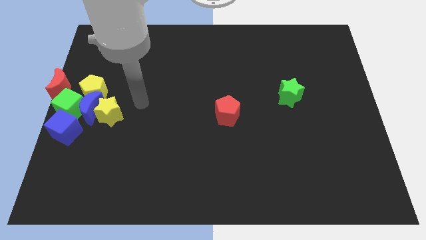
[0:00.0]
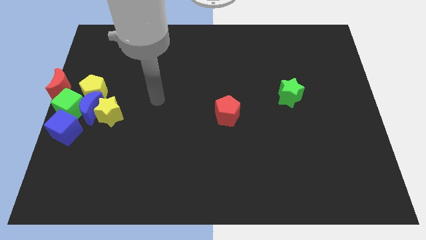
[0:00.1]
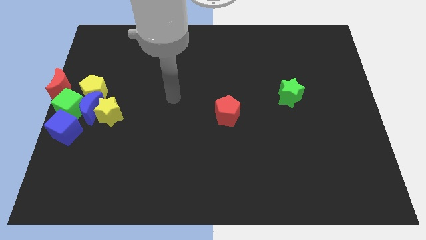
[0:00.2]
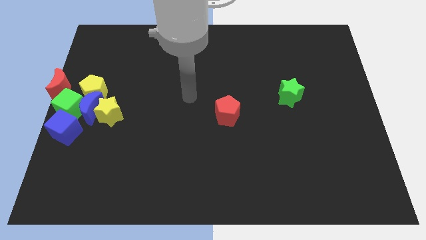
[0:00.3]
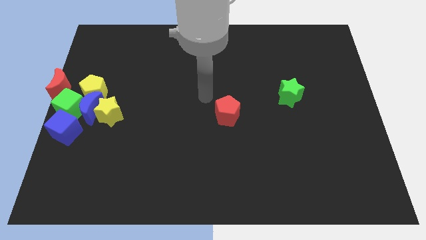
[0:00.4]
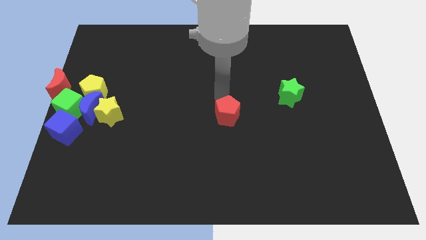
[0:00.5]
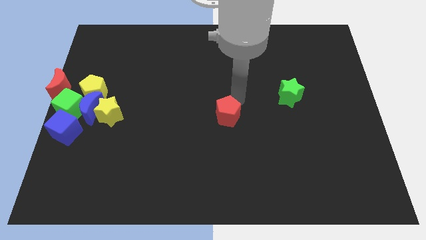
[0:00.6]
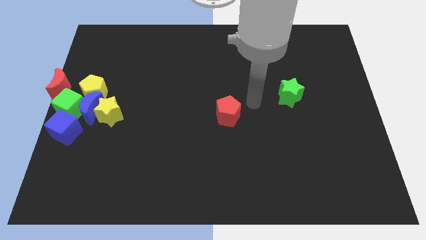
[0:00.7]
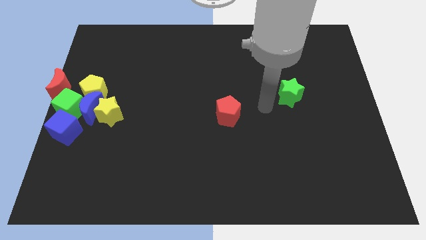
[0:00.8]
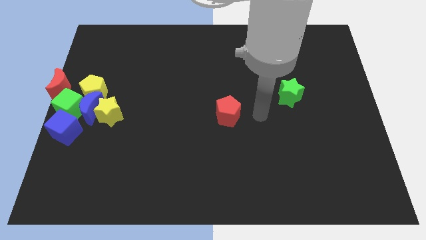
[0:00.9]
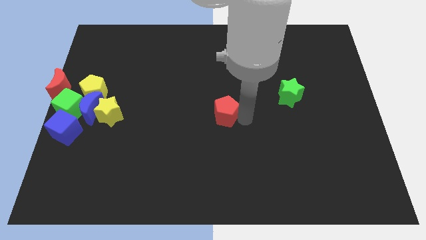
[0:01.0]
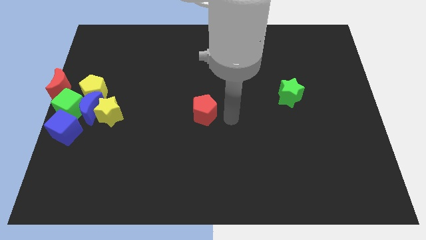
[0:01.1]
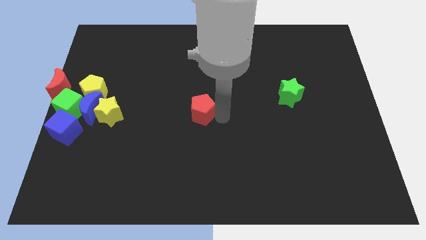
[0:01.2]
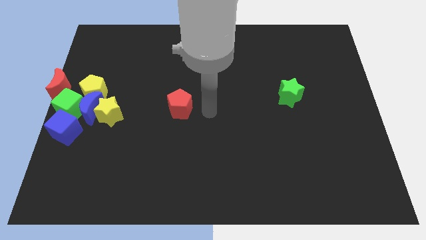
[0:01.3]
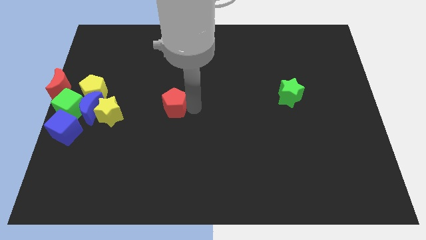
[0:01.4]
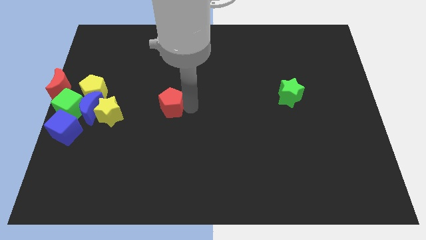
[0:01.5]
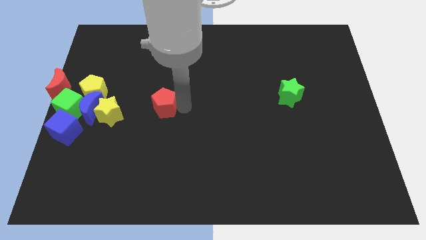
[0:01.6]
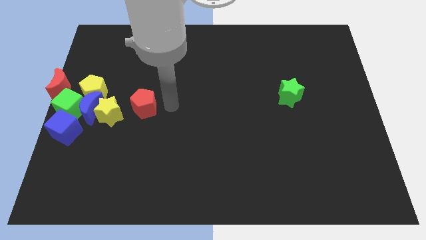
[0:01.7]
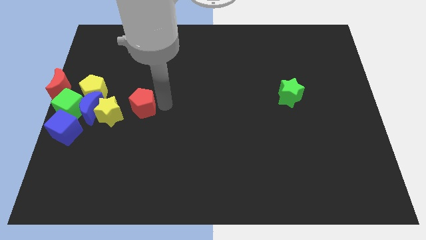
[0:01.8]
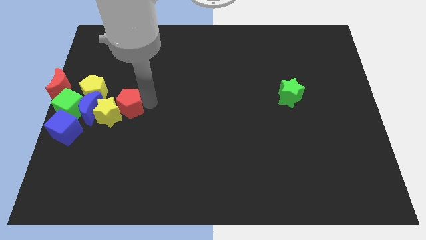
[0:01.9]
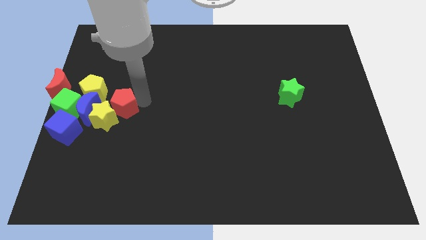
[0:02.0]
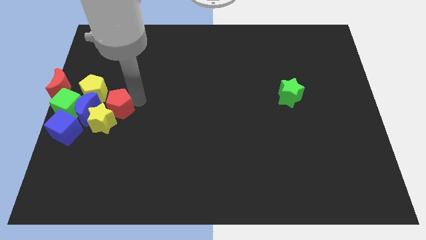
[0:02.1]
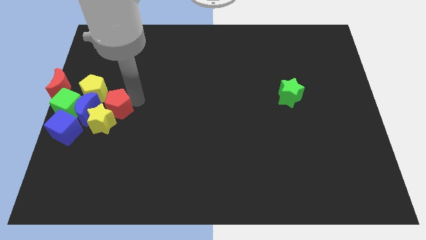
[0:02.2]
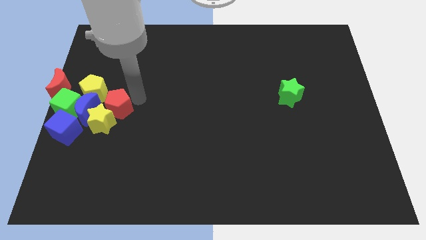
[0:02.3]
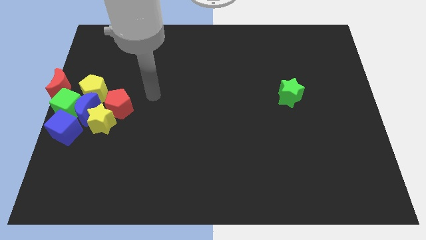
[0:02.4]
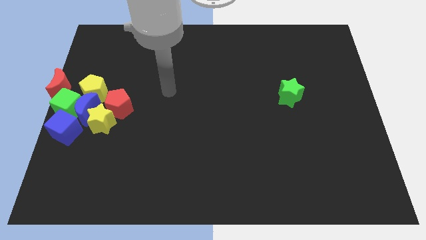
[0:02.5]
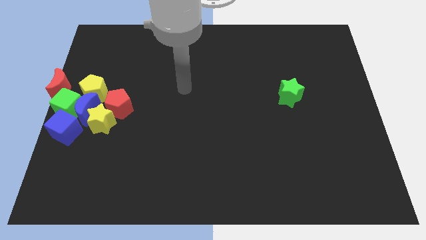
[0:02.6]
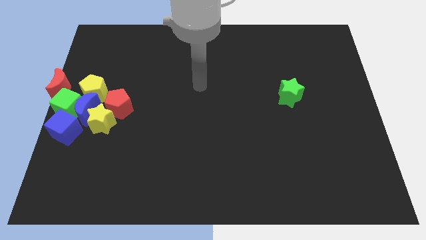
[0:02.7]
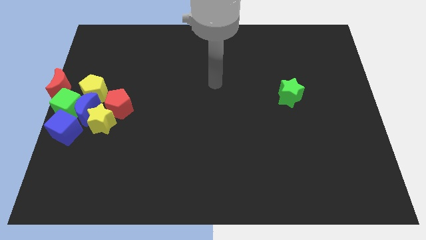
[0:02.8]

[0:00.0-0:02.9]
move red pentagon into yellow star

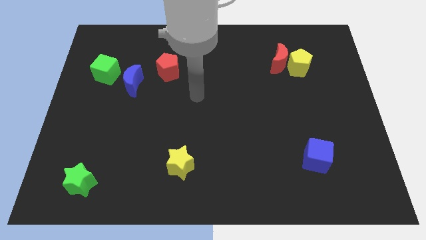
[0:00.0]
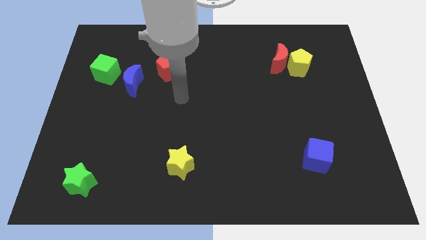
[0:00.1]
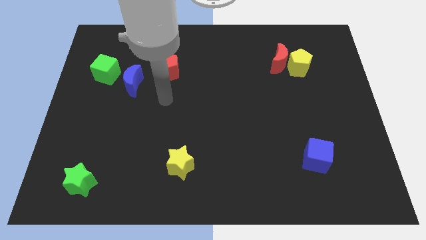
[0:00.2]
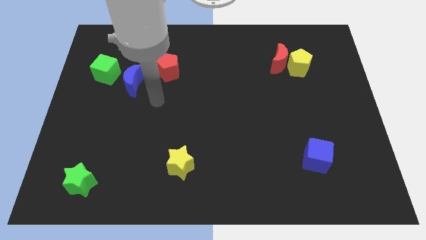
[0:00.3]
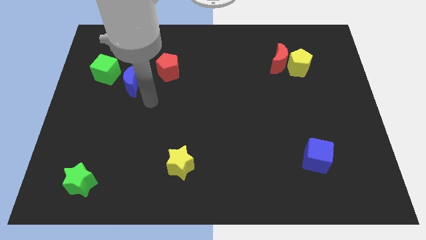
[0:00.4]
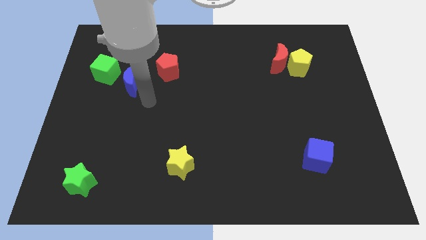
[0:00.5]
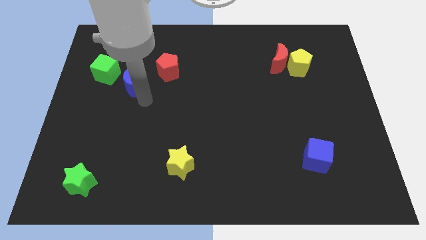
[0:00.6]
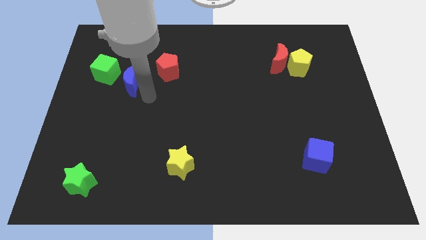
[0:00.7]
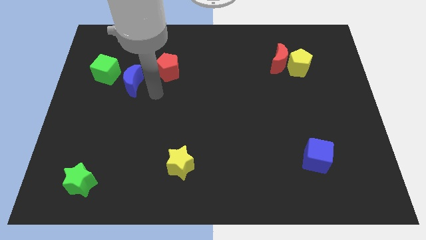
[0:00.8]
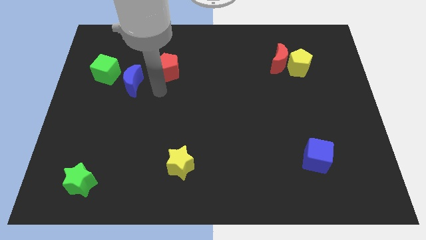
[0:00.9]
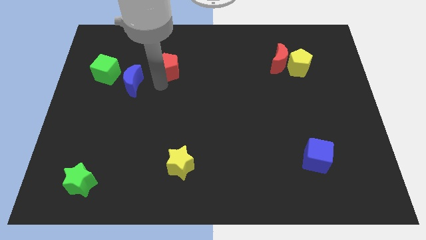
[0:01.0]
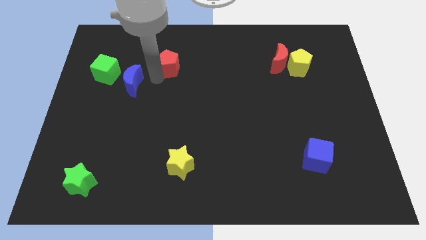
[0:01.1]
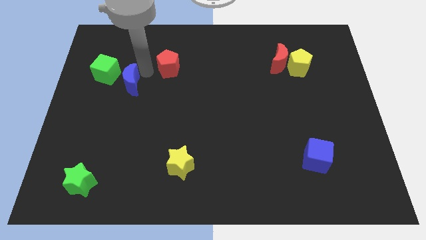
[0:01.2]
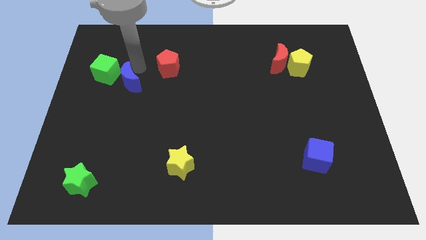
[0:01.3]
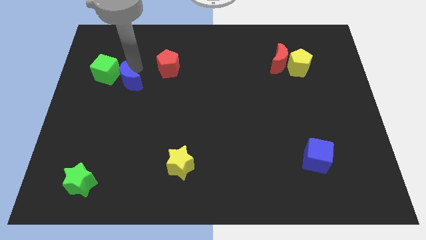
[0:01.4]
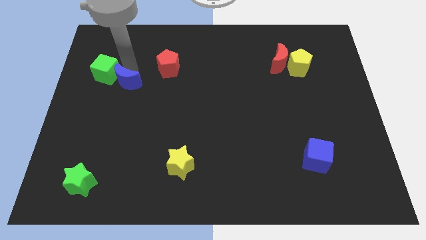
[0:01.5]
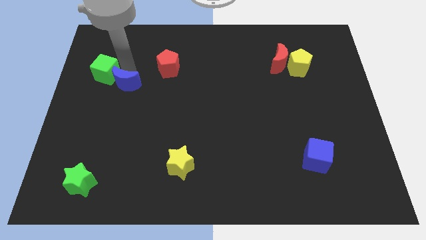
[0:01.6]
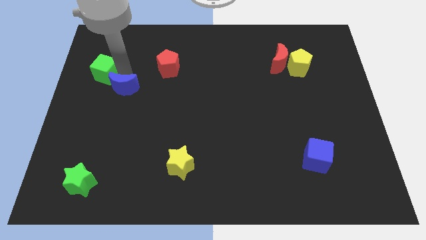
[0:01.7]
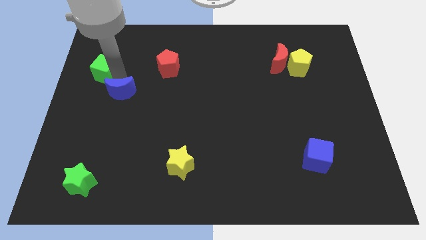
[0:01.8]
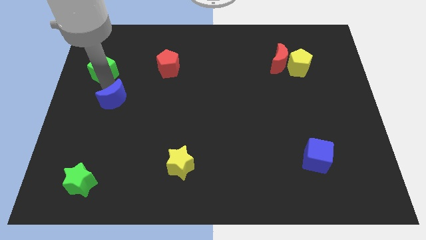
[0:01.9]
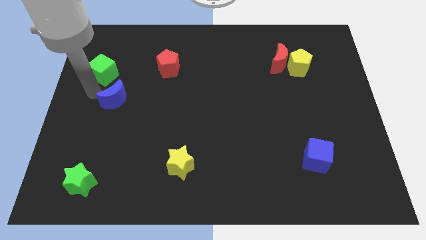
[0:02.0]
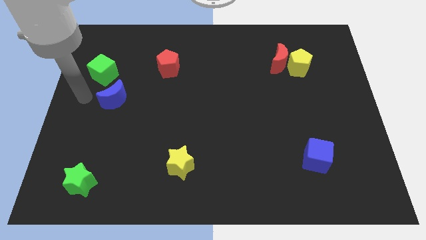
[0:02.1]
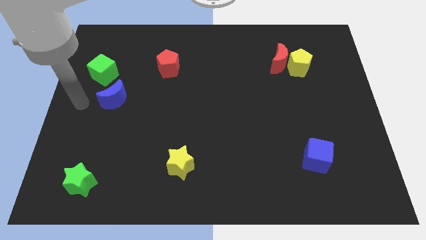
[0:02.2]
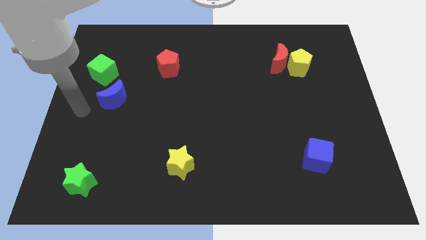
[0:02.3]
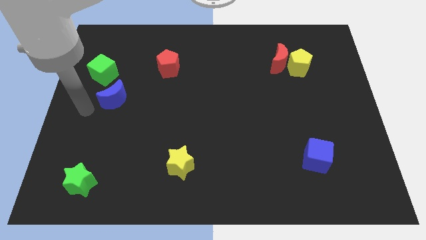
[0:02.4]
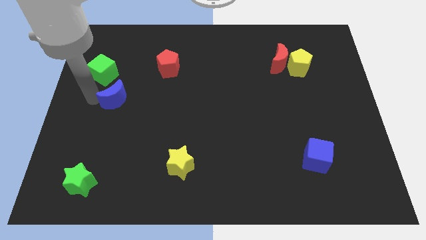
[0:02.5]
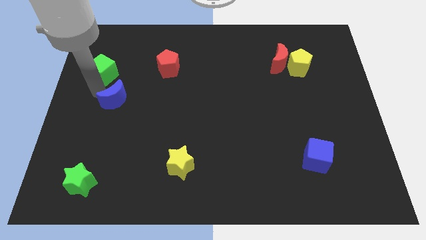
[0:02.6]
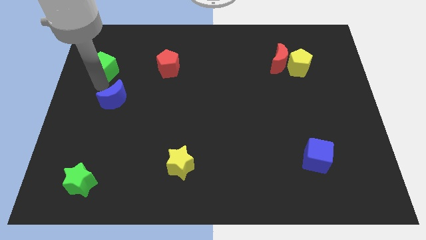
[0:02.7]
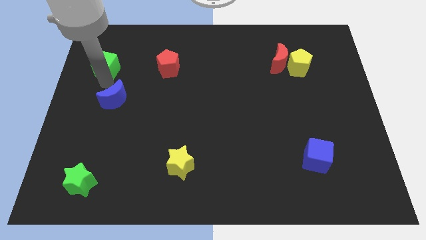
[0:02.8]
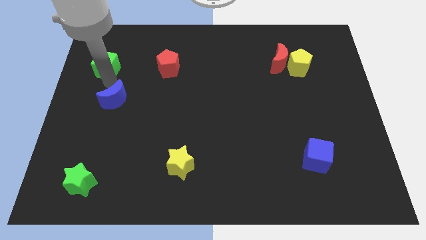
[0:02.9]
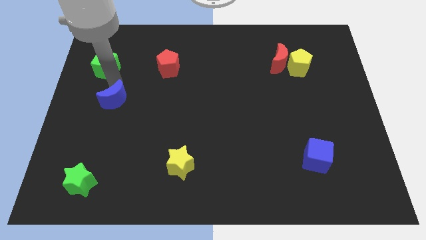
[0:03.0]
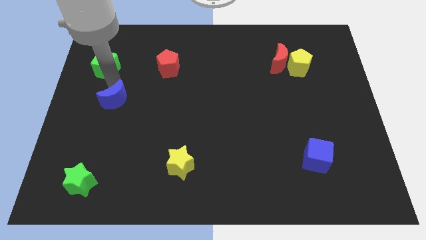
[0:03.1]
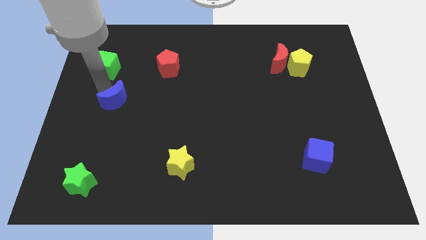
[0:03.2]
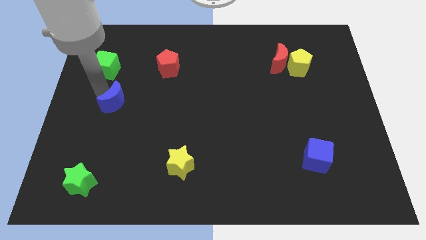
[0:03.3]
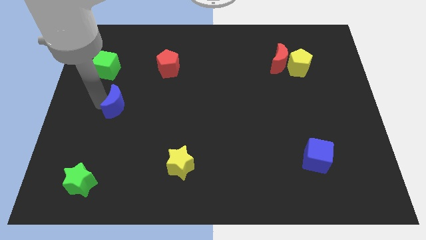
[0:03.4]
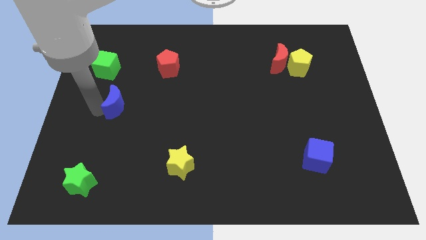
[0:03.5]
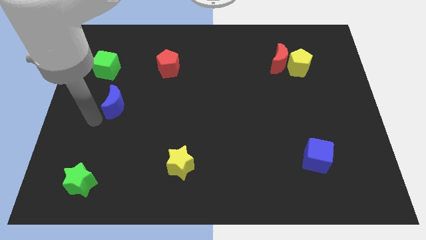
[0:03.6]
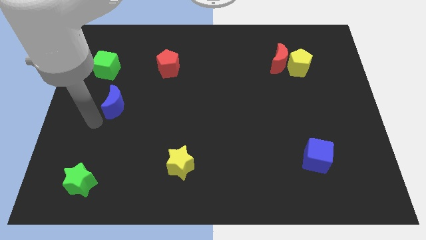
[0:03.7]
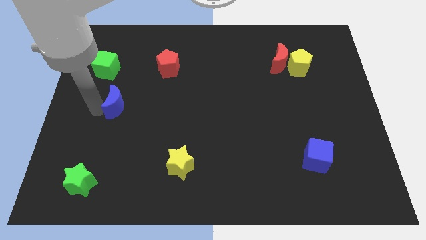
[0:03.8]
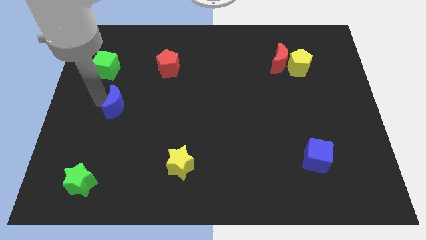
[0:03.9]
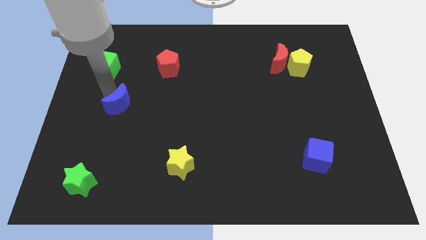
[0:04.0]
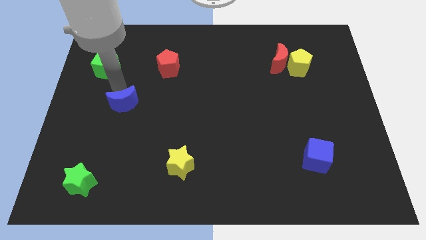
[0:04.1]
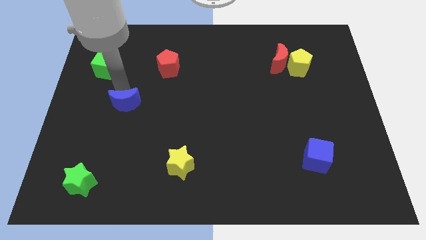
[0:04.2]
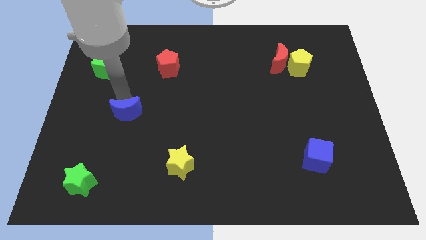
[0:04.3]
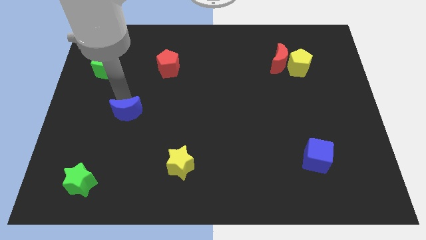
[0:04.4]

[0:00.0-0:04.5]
separate blue moon and green cube

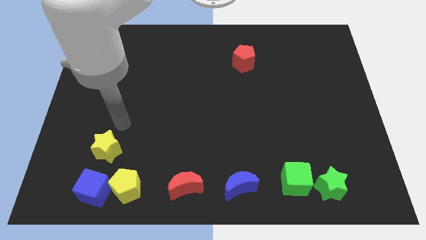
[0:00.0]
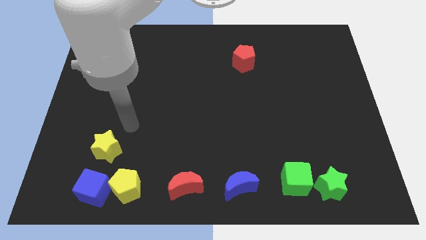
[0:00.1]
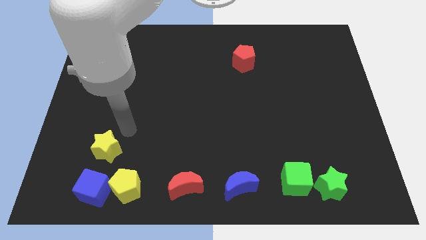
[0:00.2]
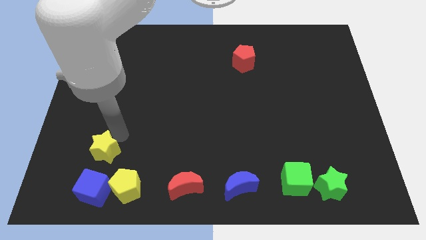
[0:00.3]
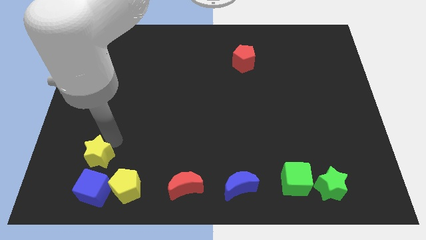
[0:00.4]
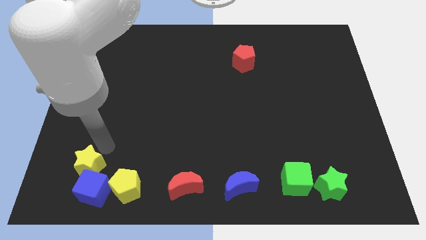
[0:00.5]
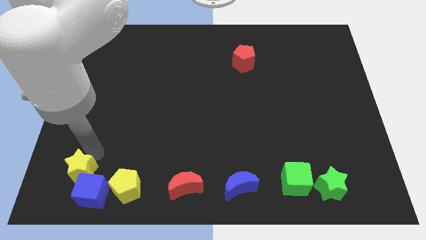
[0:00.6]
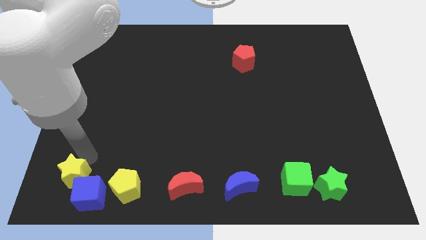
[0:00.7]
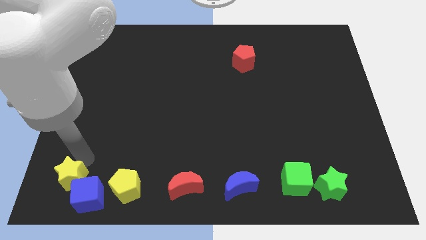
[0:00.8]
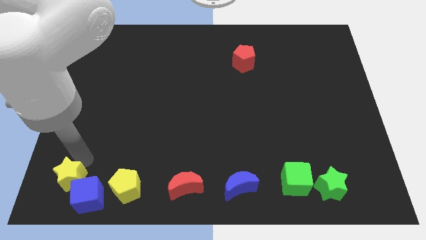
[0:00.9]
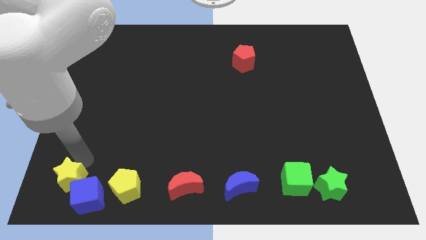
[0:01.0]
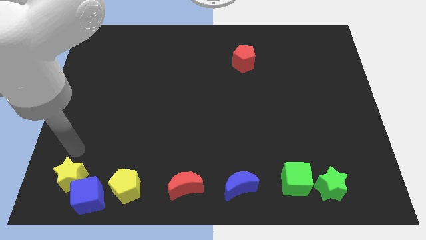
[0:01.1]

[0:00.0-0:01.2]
push the yellow star into the blue cube

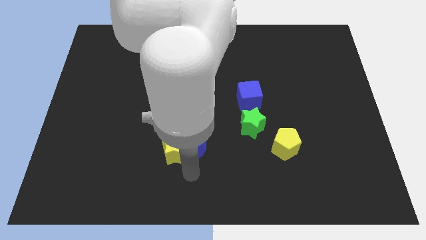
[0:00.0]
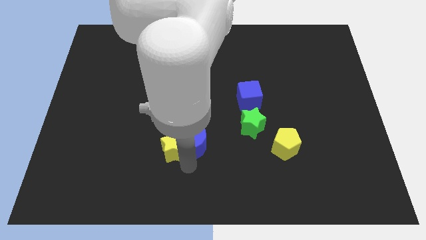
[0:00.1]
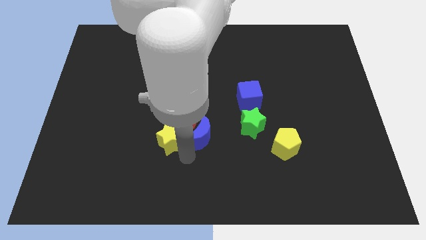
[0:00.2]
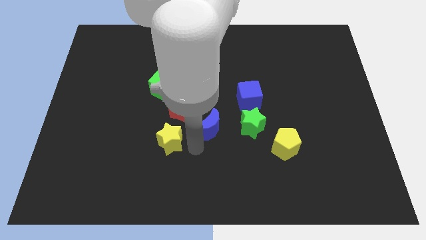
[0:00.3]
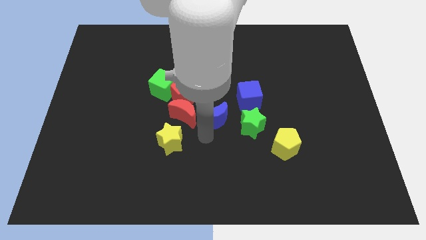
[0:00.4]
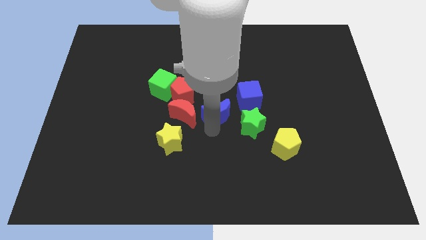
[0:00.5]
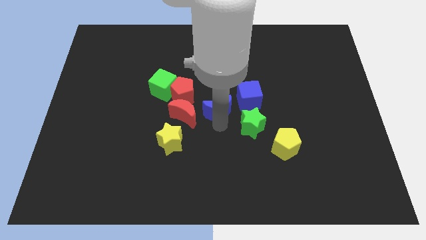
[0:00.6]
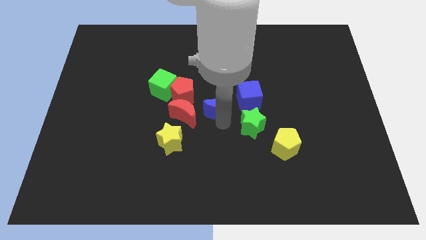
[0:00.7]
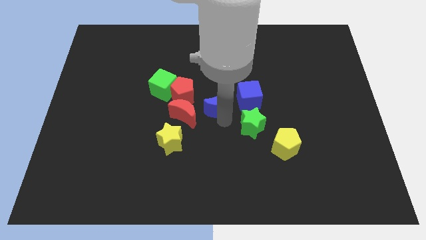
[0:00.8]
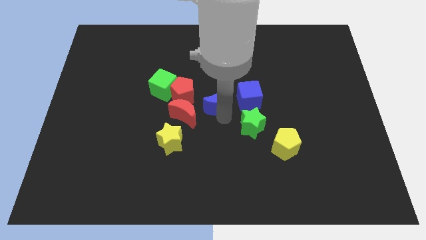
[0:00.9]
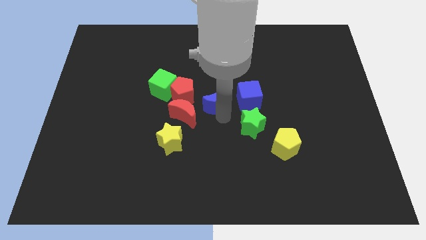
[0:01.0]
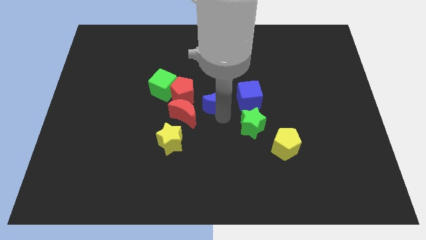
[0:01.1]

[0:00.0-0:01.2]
move the blue moon towards the center of the board
